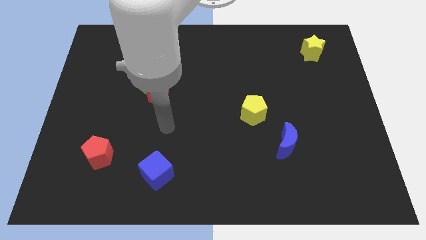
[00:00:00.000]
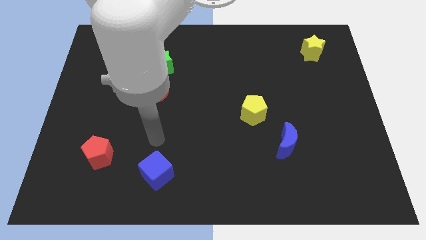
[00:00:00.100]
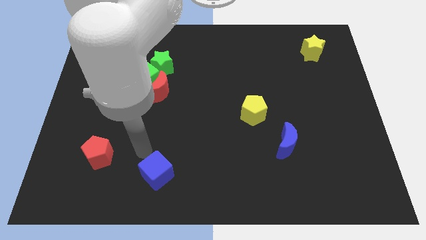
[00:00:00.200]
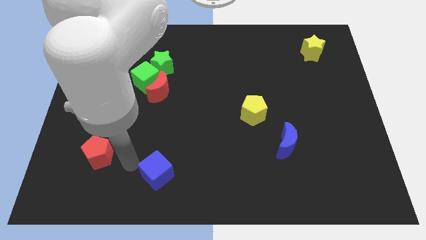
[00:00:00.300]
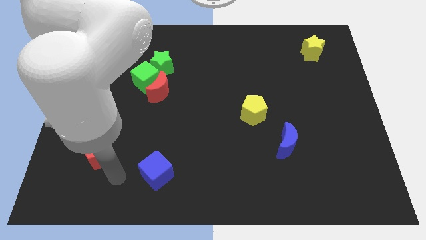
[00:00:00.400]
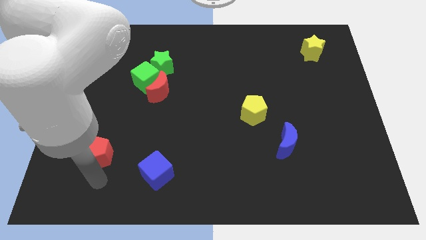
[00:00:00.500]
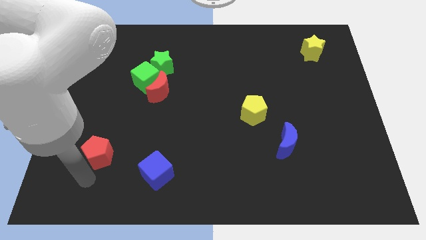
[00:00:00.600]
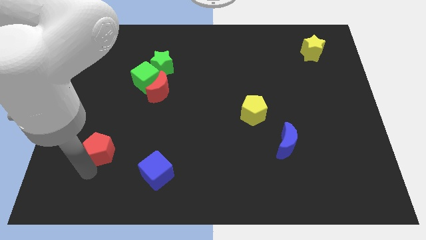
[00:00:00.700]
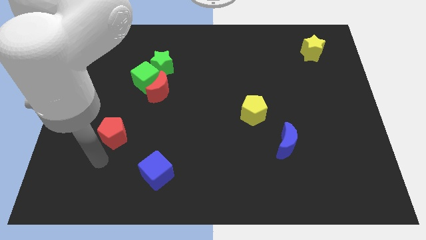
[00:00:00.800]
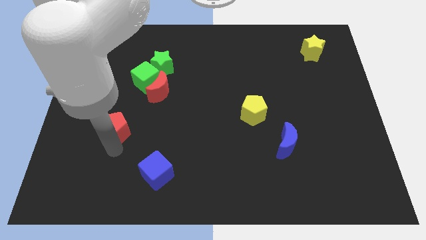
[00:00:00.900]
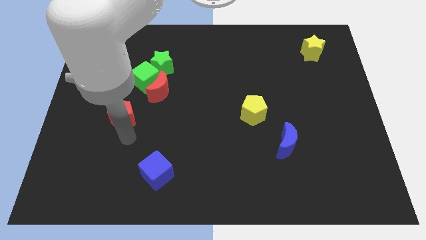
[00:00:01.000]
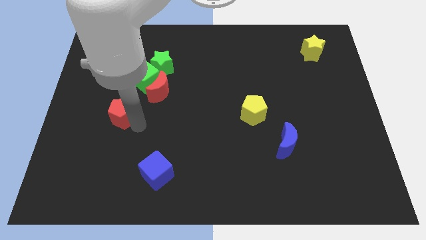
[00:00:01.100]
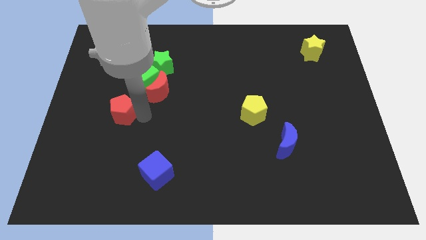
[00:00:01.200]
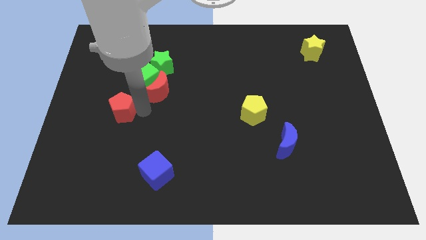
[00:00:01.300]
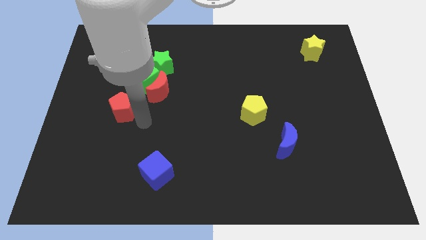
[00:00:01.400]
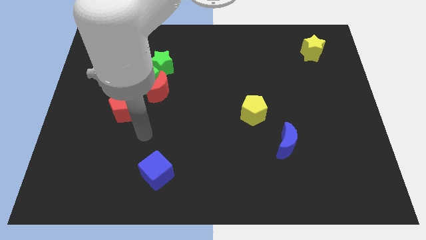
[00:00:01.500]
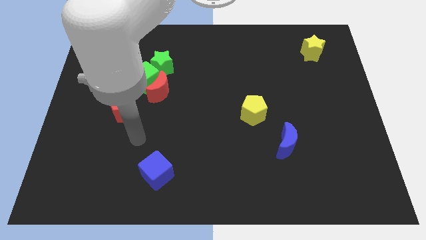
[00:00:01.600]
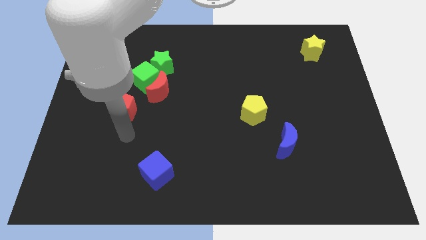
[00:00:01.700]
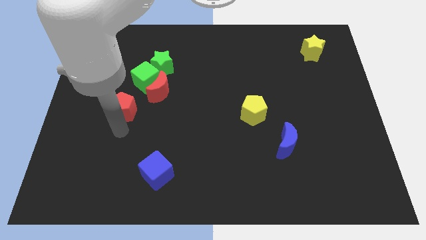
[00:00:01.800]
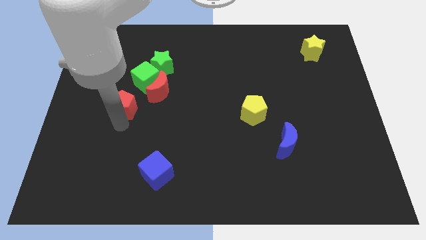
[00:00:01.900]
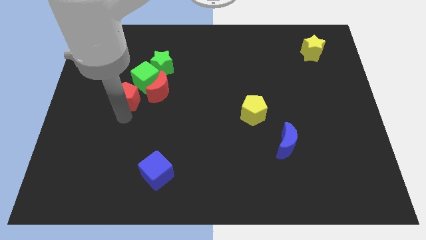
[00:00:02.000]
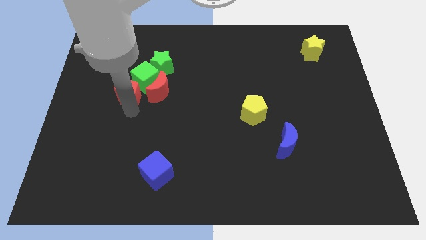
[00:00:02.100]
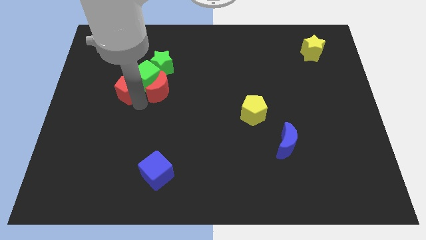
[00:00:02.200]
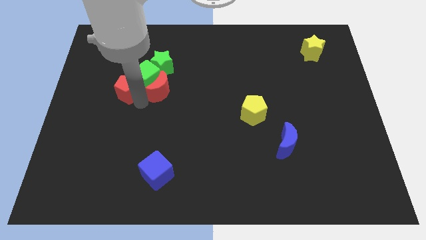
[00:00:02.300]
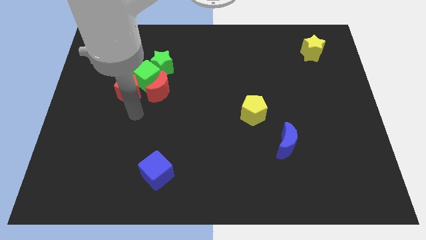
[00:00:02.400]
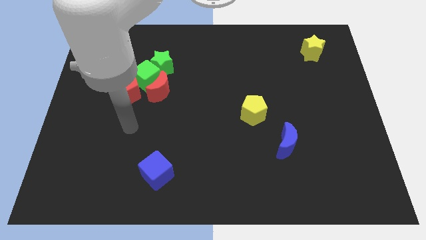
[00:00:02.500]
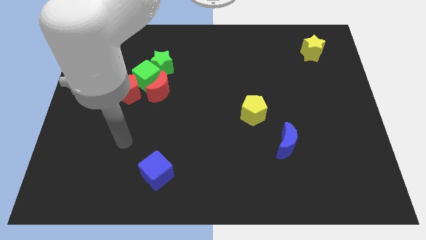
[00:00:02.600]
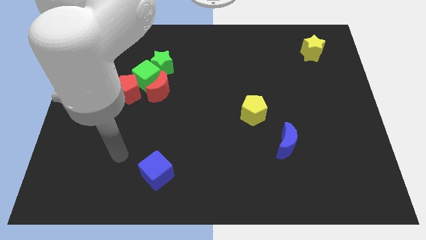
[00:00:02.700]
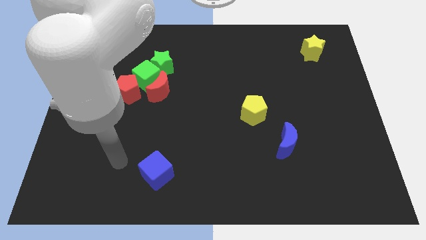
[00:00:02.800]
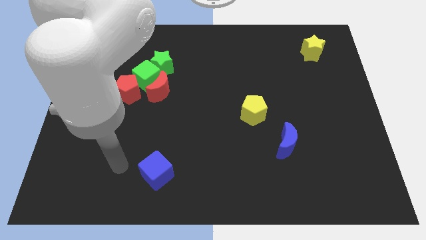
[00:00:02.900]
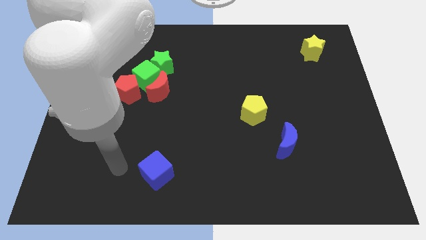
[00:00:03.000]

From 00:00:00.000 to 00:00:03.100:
push red pentagon into green cube

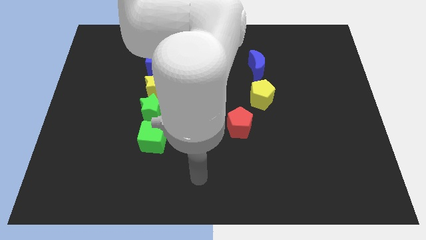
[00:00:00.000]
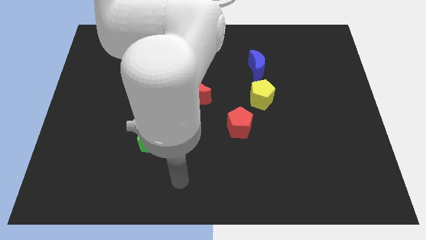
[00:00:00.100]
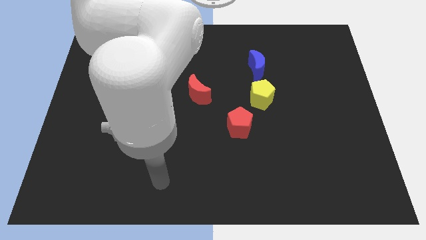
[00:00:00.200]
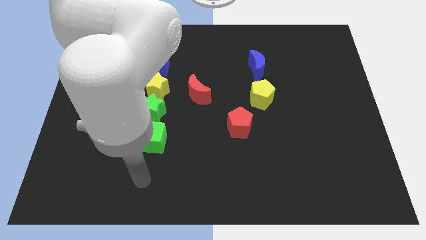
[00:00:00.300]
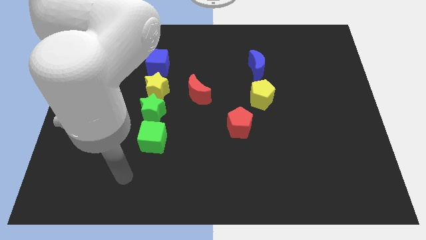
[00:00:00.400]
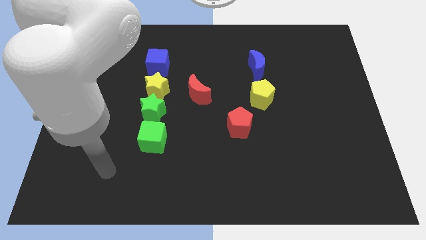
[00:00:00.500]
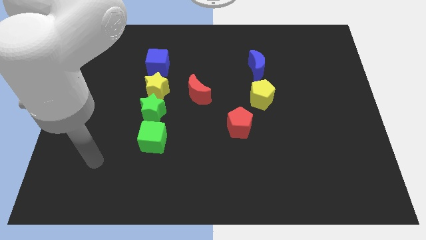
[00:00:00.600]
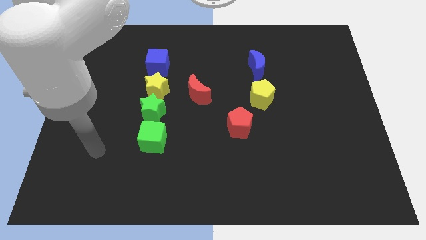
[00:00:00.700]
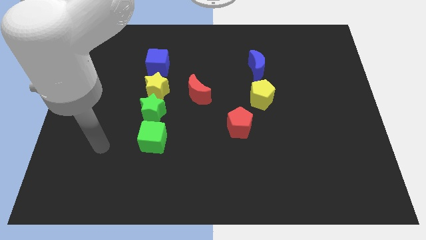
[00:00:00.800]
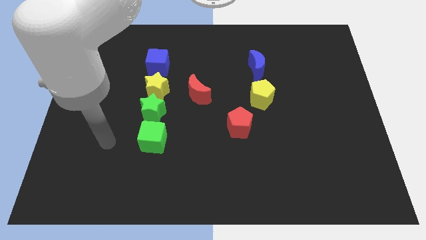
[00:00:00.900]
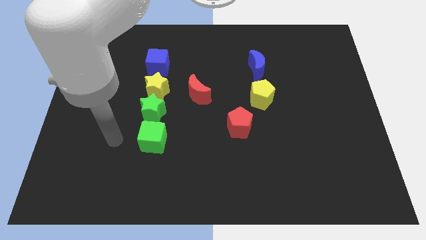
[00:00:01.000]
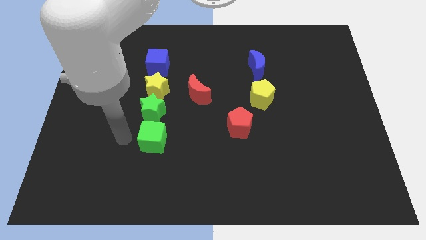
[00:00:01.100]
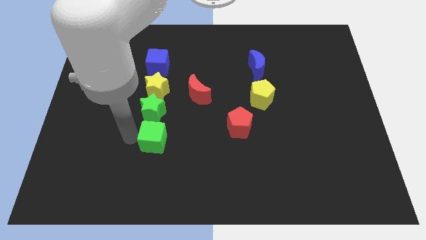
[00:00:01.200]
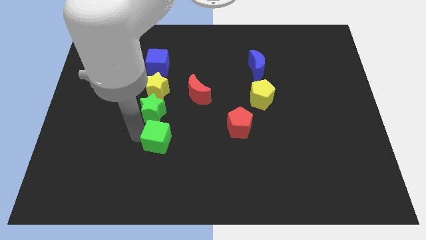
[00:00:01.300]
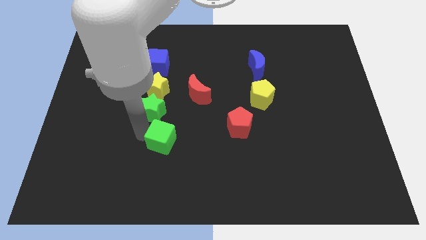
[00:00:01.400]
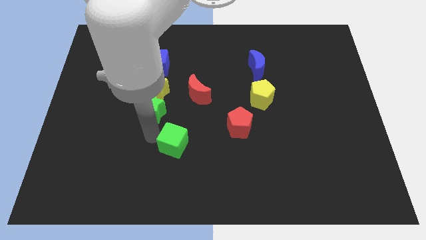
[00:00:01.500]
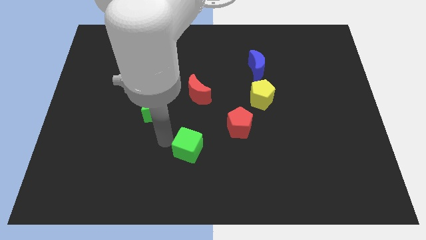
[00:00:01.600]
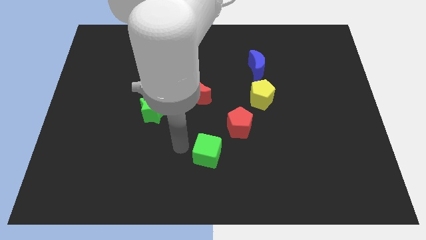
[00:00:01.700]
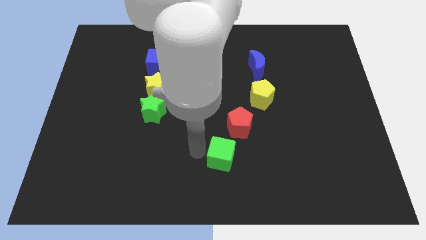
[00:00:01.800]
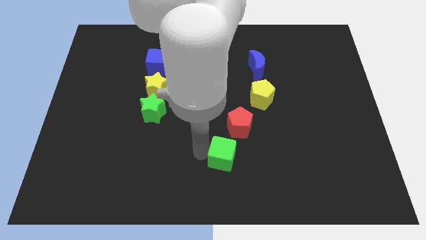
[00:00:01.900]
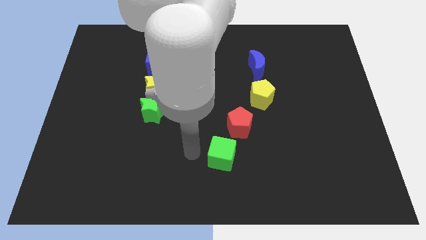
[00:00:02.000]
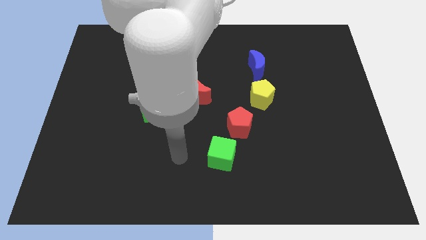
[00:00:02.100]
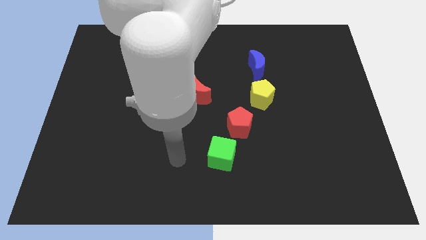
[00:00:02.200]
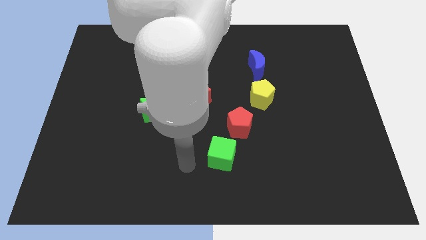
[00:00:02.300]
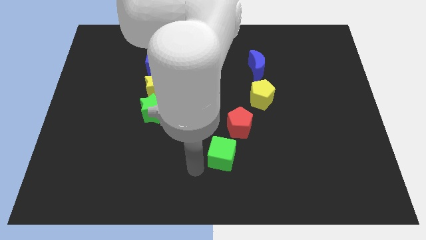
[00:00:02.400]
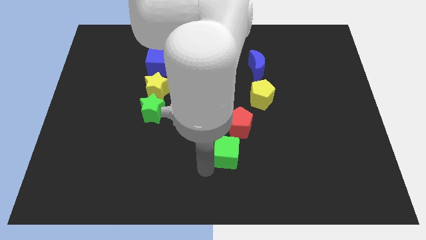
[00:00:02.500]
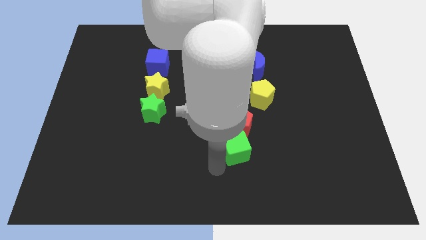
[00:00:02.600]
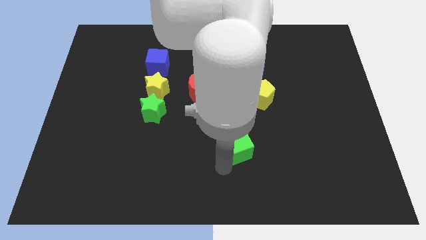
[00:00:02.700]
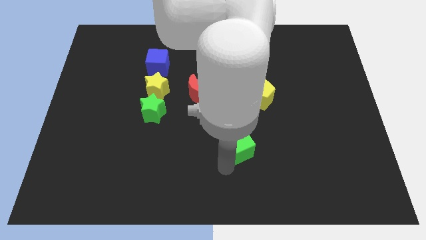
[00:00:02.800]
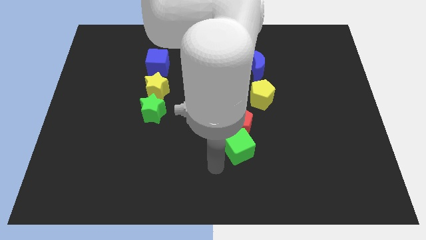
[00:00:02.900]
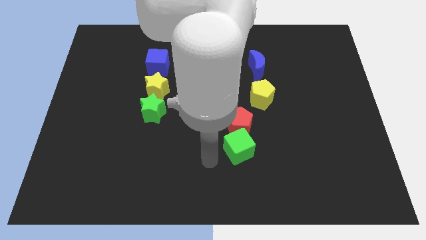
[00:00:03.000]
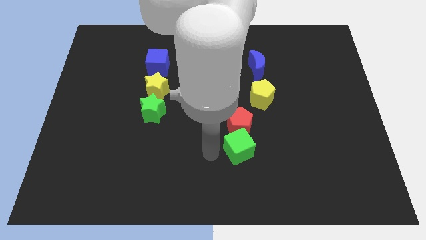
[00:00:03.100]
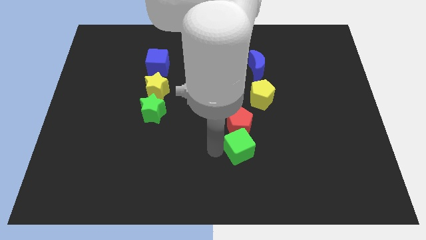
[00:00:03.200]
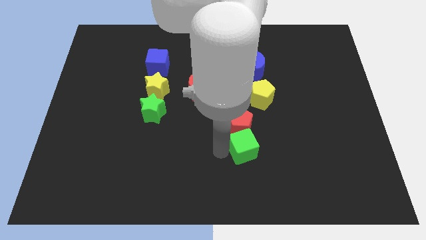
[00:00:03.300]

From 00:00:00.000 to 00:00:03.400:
push the green cube to the bottom of the red pentagon

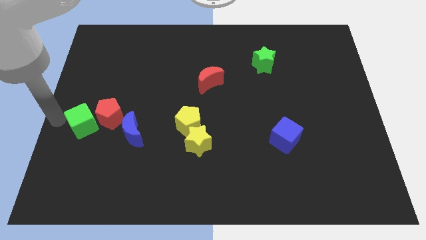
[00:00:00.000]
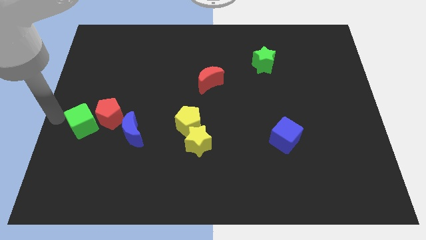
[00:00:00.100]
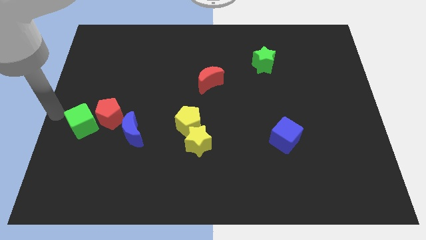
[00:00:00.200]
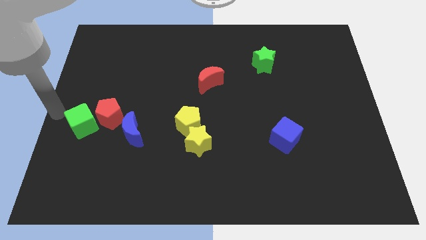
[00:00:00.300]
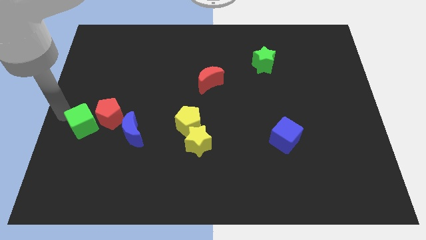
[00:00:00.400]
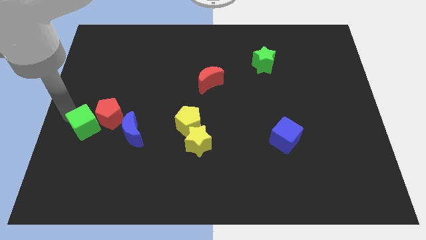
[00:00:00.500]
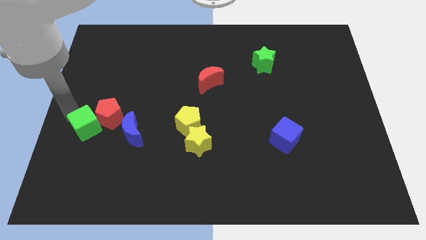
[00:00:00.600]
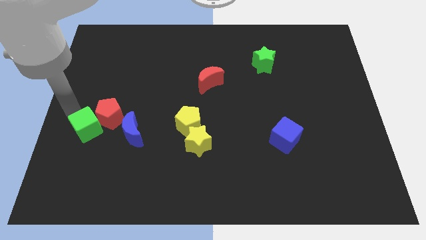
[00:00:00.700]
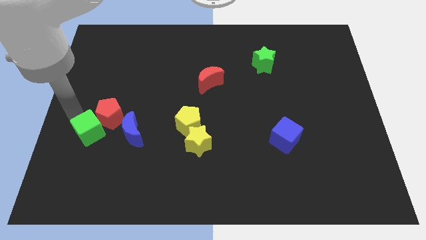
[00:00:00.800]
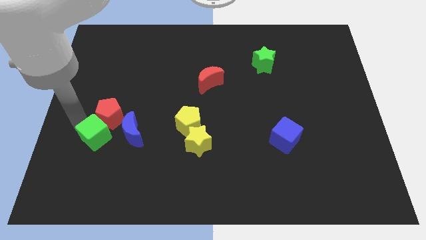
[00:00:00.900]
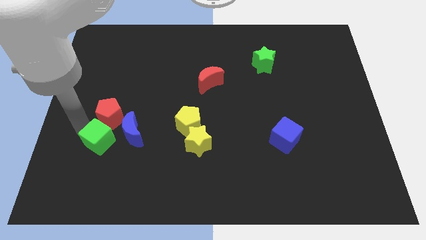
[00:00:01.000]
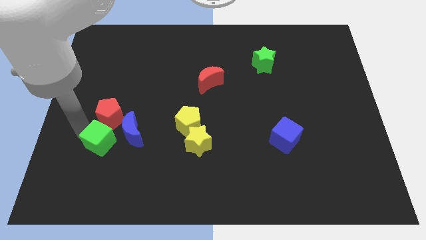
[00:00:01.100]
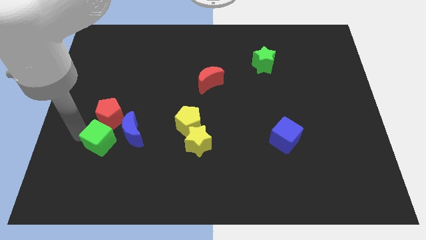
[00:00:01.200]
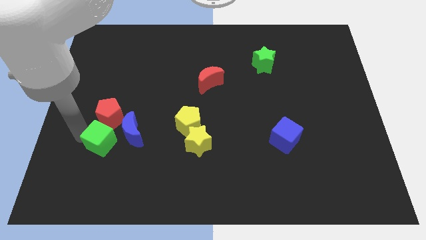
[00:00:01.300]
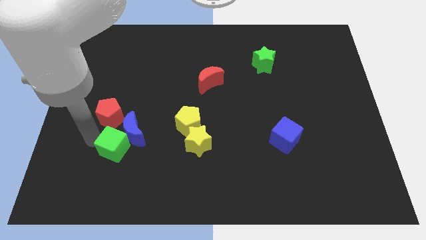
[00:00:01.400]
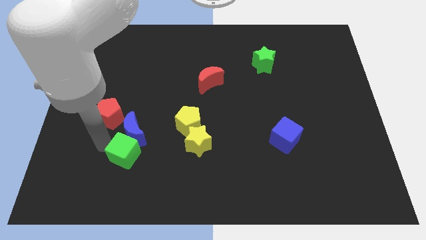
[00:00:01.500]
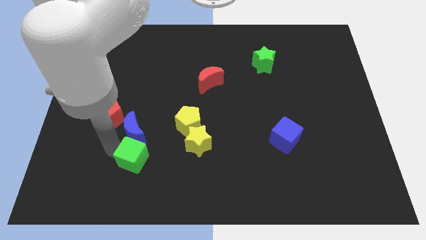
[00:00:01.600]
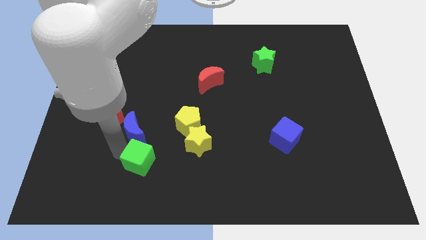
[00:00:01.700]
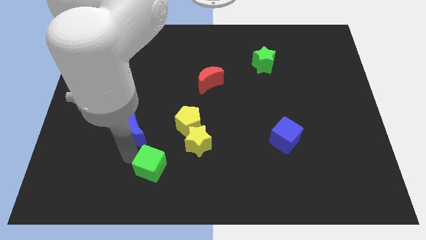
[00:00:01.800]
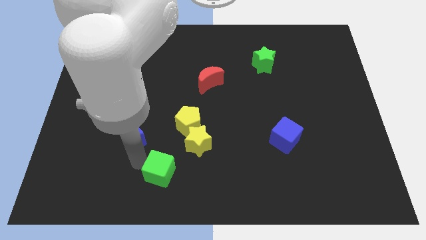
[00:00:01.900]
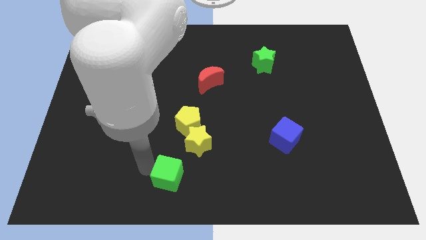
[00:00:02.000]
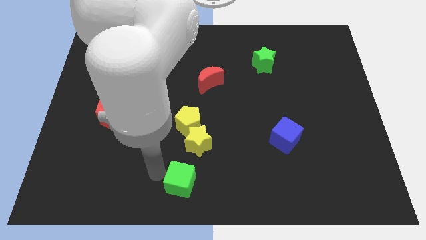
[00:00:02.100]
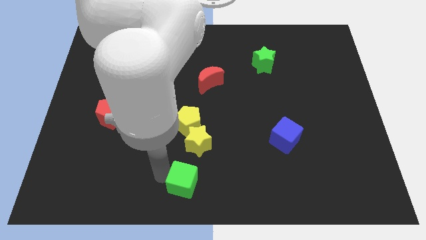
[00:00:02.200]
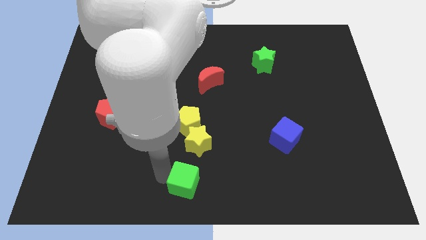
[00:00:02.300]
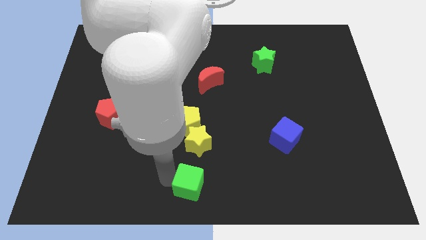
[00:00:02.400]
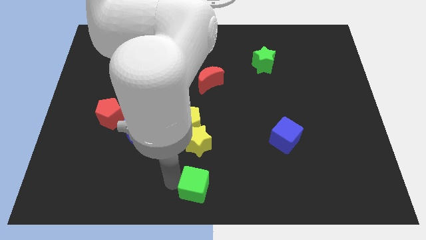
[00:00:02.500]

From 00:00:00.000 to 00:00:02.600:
move the green cube to the bottom of the yellow star
